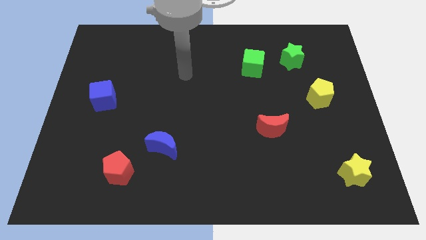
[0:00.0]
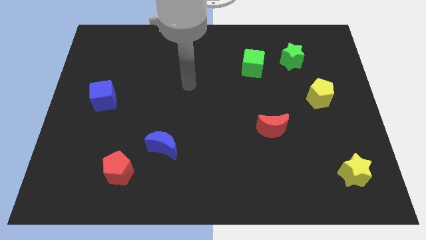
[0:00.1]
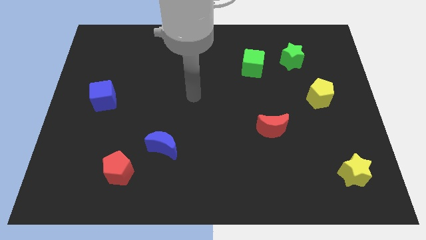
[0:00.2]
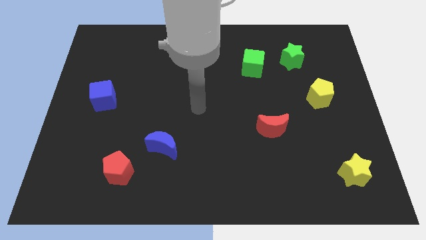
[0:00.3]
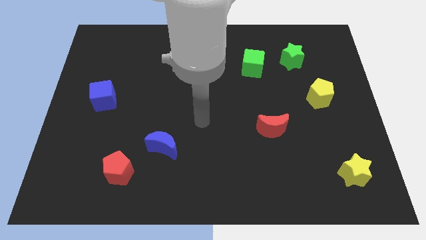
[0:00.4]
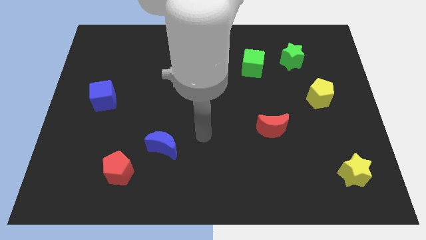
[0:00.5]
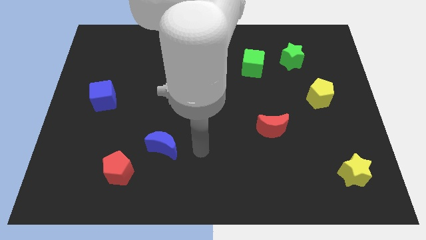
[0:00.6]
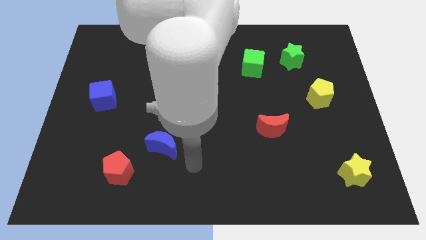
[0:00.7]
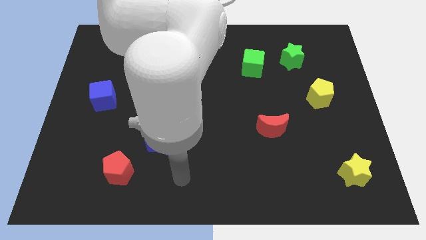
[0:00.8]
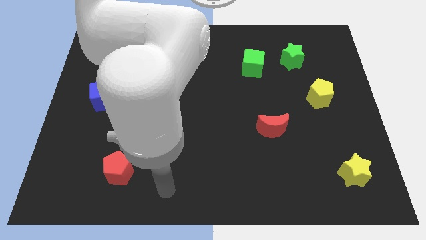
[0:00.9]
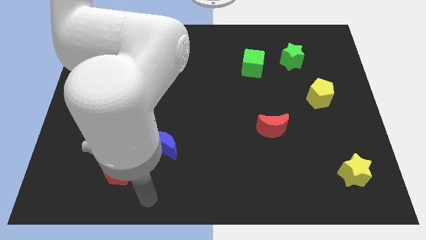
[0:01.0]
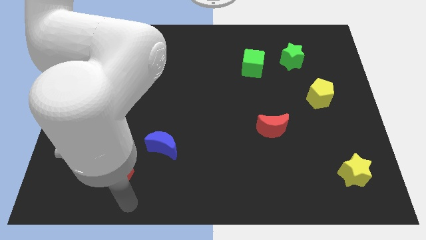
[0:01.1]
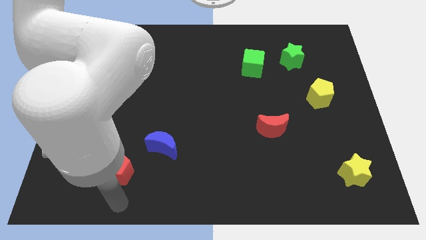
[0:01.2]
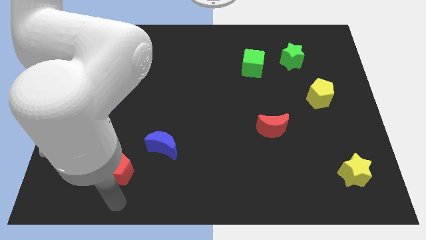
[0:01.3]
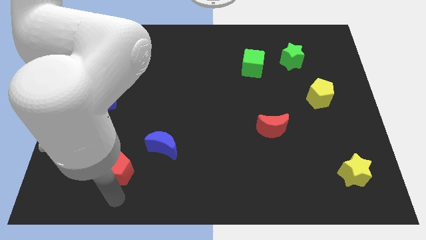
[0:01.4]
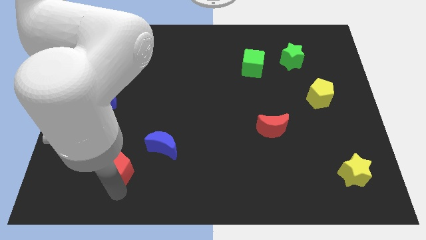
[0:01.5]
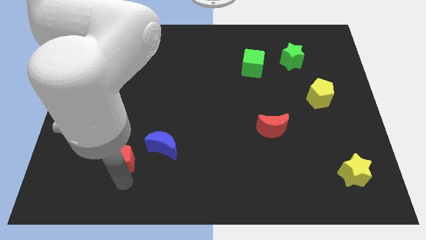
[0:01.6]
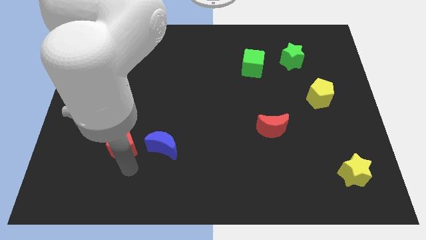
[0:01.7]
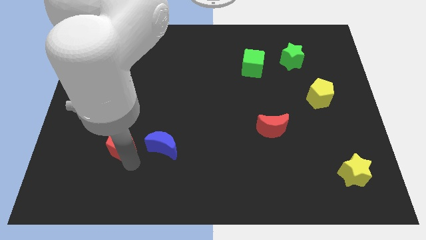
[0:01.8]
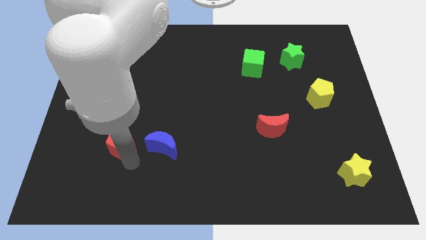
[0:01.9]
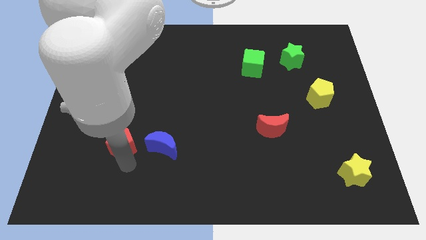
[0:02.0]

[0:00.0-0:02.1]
move the red pentagon to the left of the blue moon

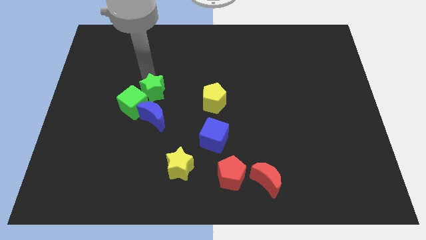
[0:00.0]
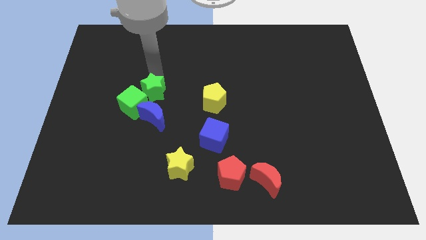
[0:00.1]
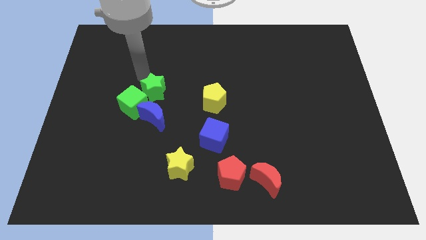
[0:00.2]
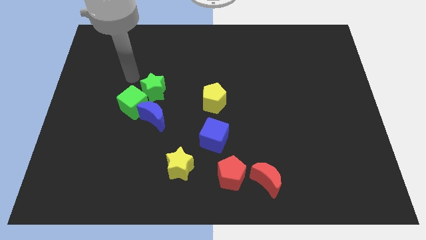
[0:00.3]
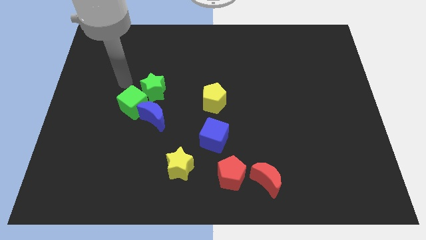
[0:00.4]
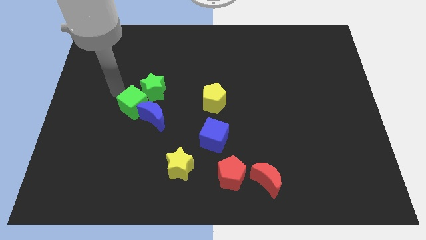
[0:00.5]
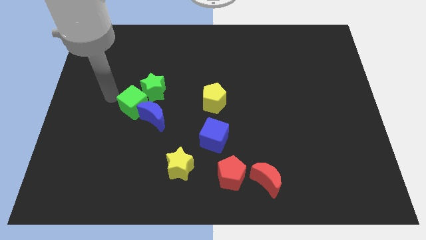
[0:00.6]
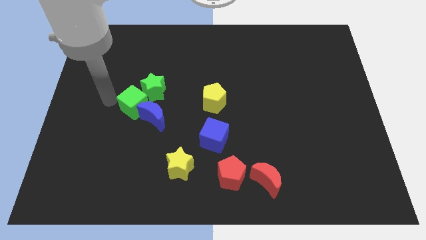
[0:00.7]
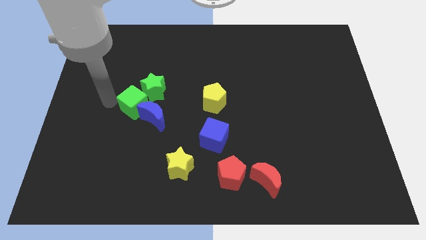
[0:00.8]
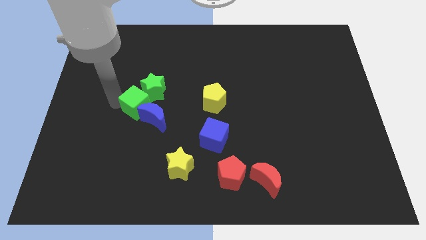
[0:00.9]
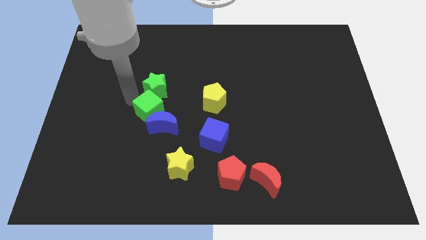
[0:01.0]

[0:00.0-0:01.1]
move the green cube to the bottom of the green star

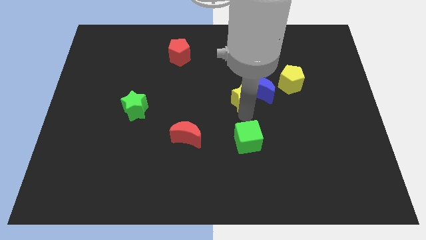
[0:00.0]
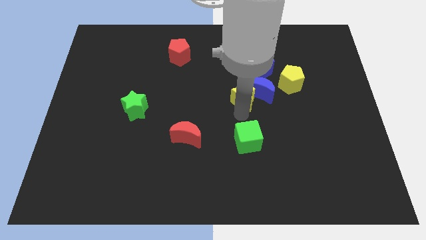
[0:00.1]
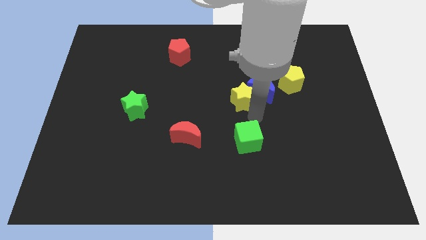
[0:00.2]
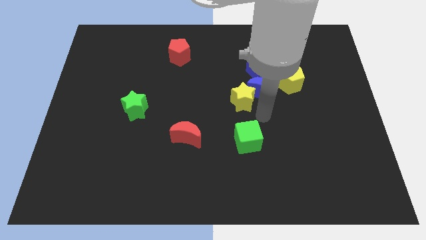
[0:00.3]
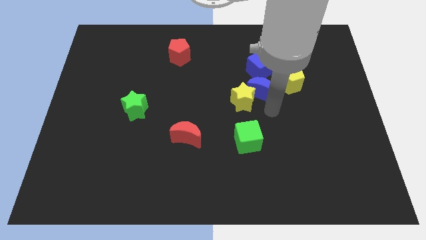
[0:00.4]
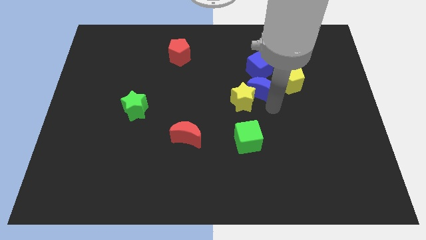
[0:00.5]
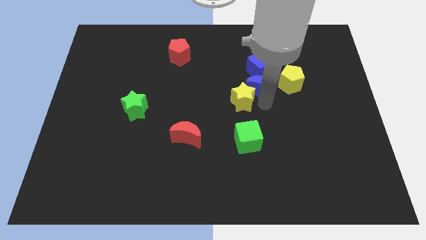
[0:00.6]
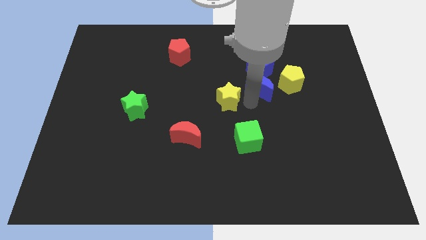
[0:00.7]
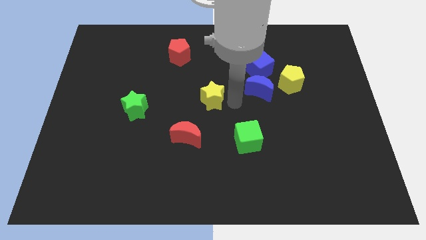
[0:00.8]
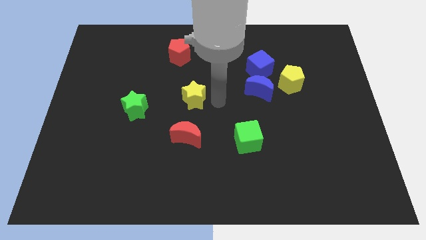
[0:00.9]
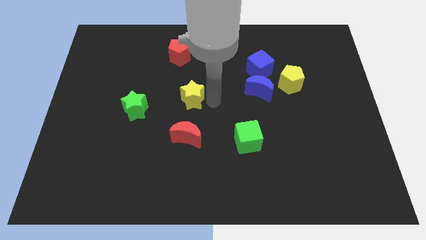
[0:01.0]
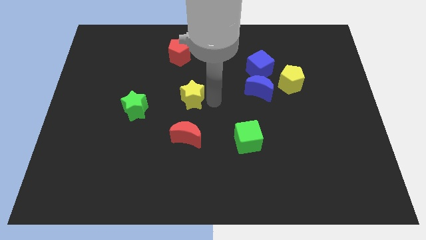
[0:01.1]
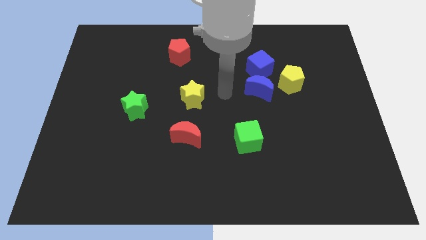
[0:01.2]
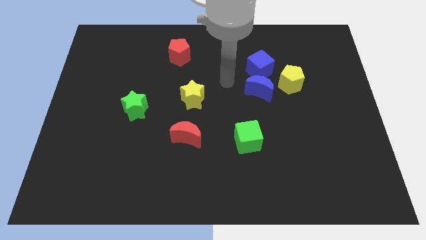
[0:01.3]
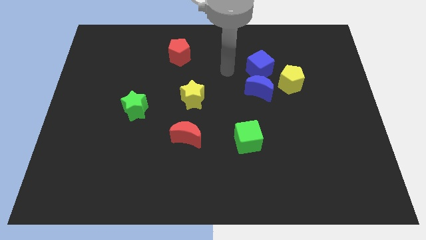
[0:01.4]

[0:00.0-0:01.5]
put the yellow star in between green star and blue crescent

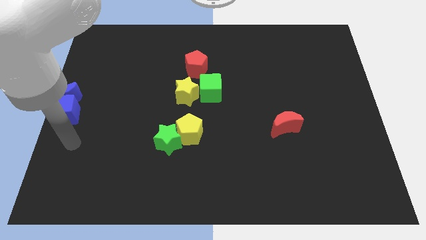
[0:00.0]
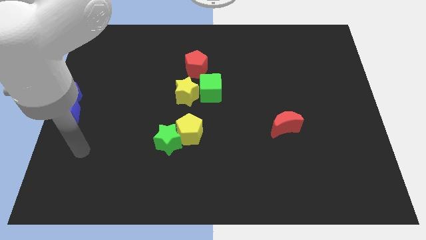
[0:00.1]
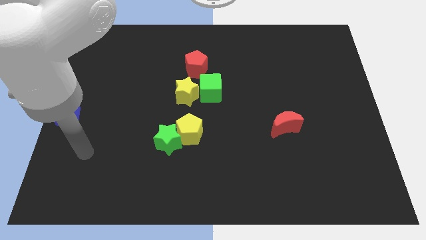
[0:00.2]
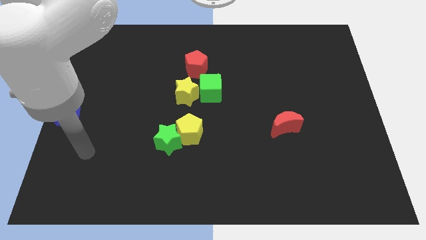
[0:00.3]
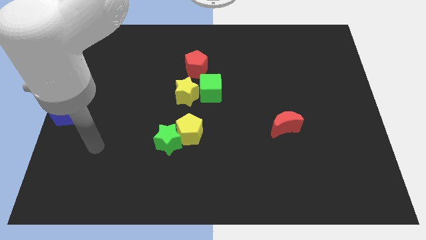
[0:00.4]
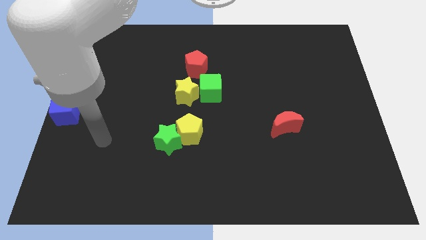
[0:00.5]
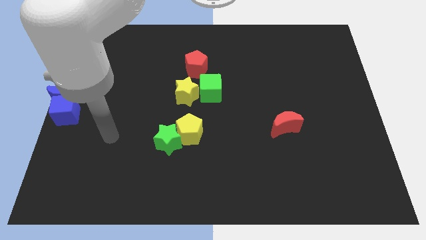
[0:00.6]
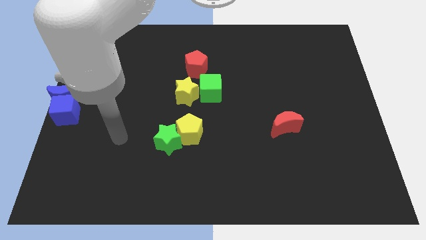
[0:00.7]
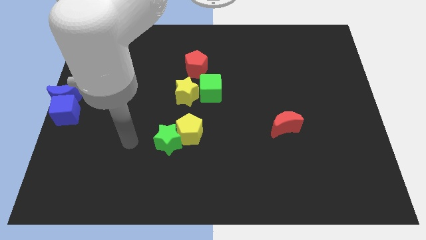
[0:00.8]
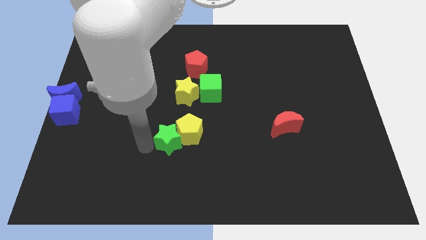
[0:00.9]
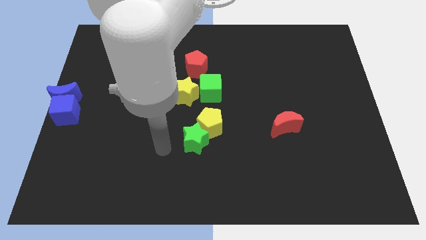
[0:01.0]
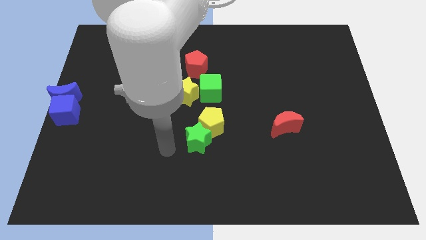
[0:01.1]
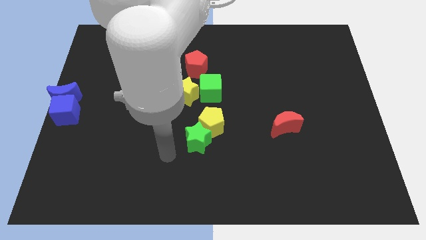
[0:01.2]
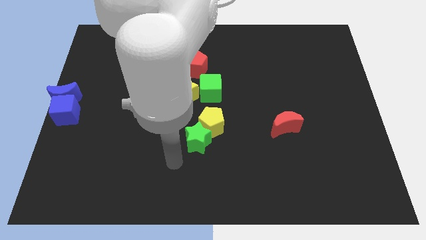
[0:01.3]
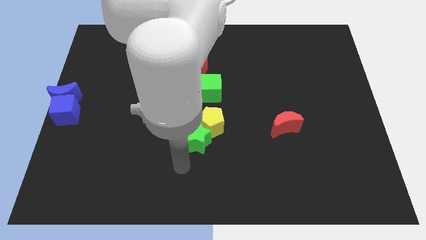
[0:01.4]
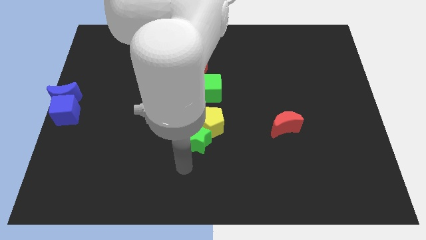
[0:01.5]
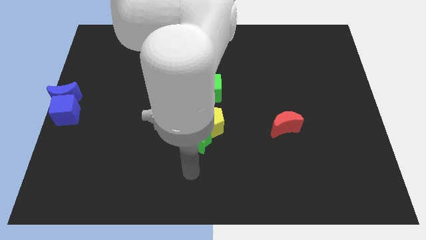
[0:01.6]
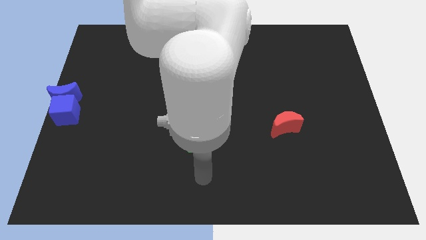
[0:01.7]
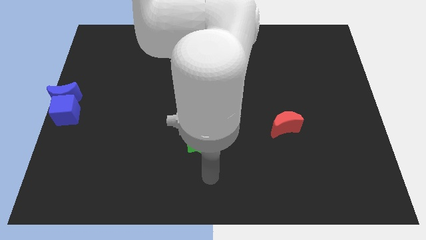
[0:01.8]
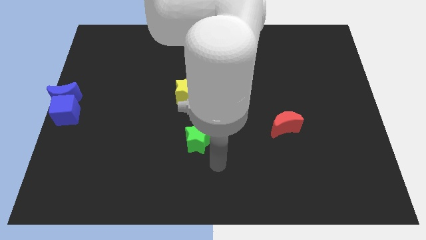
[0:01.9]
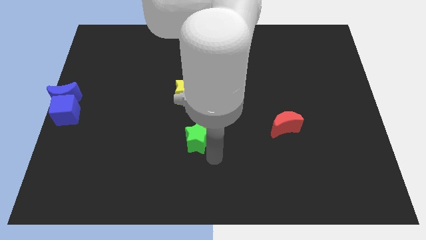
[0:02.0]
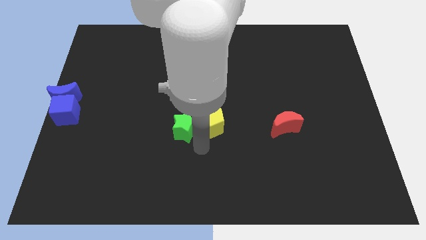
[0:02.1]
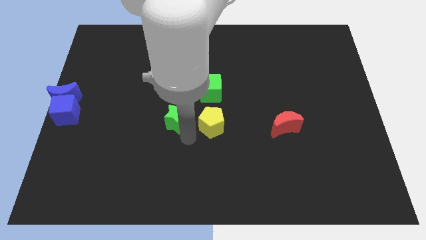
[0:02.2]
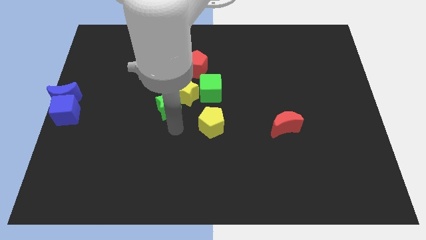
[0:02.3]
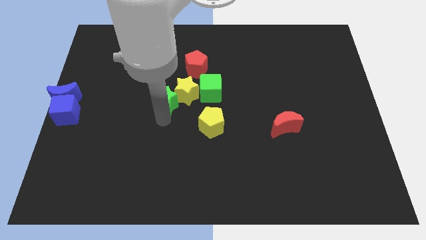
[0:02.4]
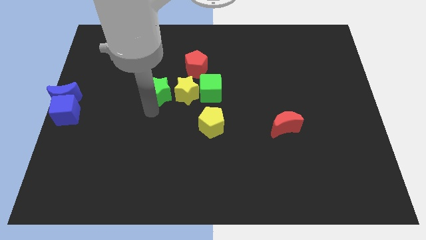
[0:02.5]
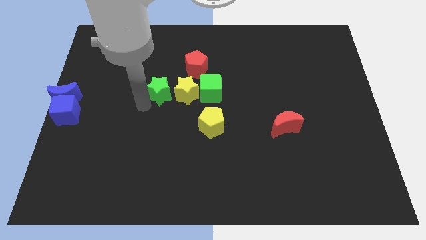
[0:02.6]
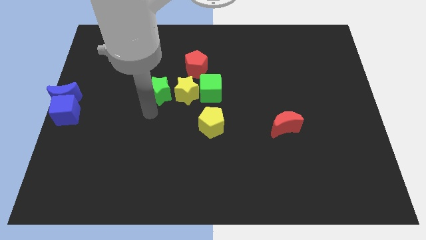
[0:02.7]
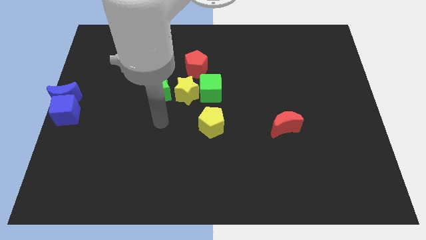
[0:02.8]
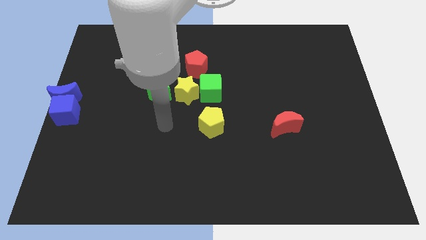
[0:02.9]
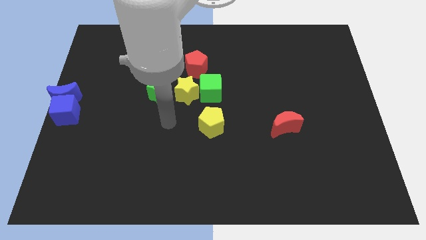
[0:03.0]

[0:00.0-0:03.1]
push the green star to the left of the yellow star

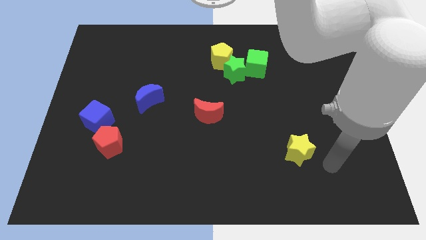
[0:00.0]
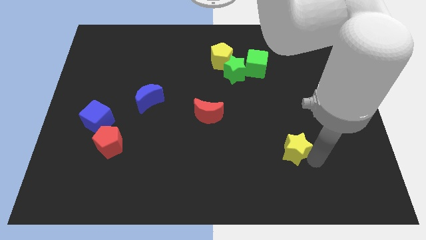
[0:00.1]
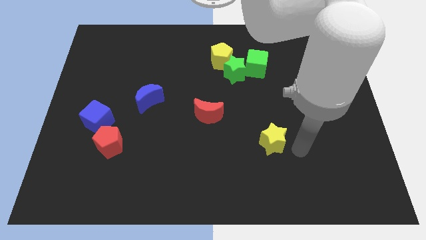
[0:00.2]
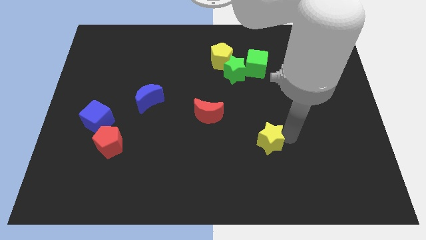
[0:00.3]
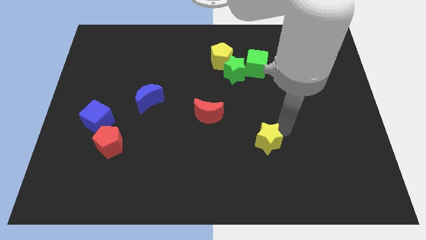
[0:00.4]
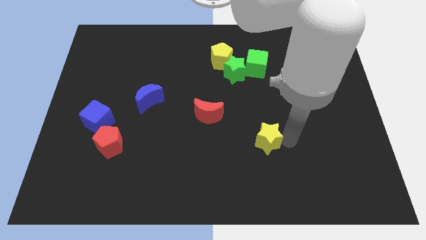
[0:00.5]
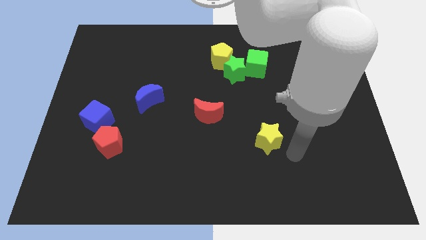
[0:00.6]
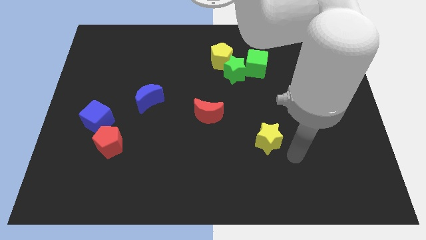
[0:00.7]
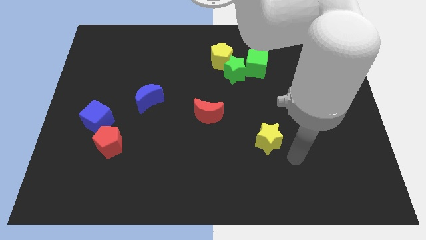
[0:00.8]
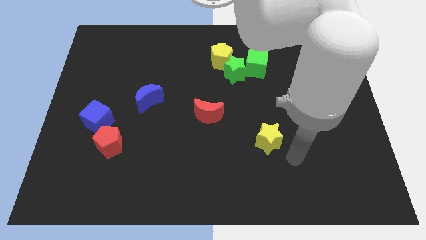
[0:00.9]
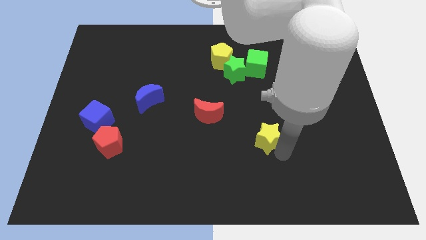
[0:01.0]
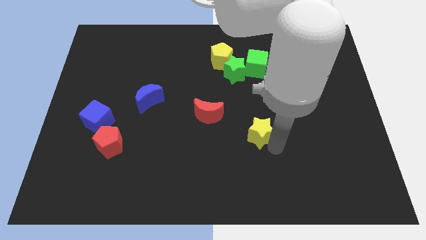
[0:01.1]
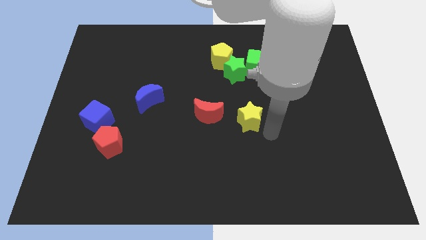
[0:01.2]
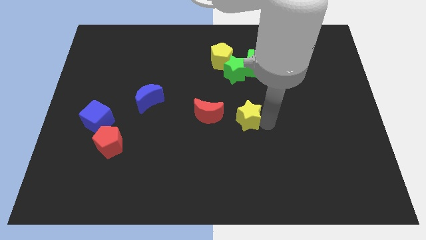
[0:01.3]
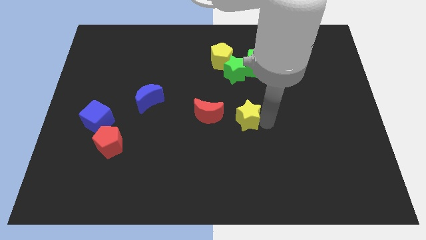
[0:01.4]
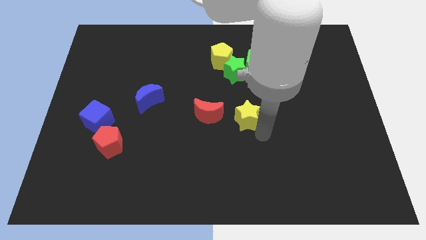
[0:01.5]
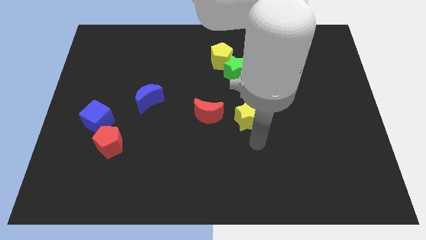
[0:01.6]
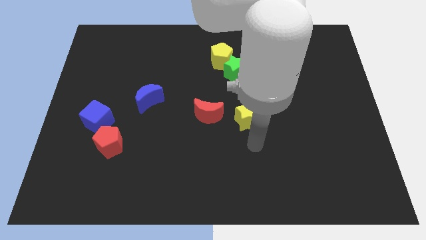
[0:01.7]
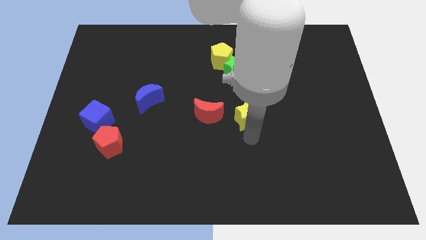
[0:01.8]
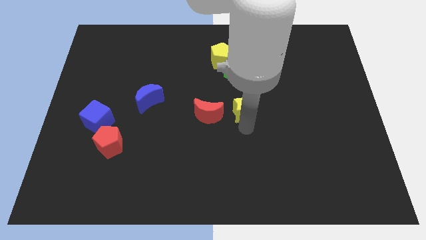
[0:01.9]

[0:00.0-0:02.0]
push the yellow star to the right of the red crescent
